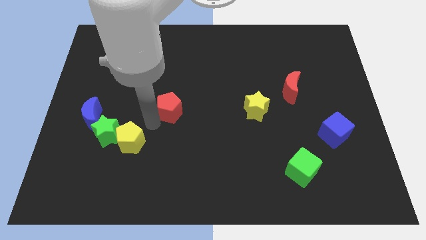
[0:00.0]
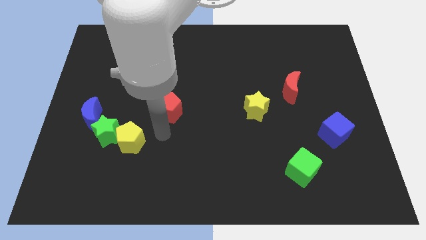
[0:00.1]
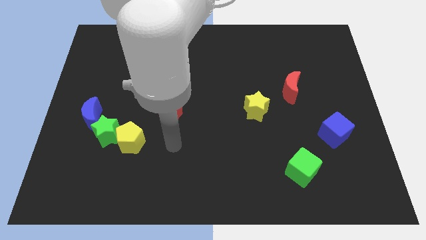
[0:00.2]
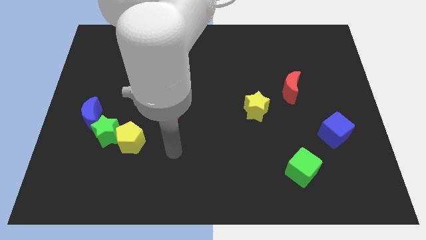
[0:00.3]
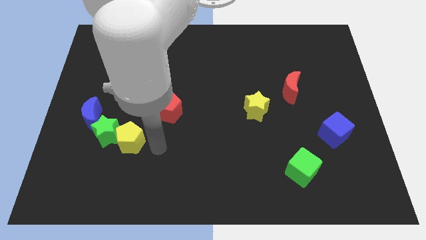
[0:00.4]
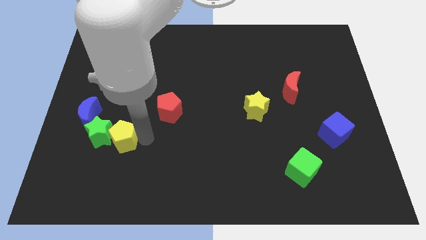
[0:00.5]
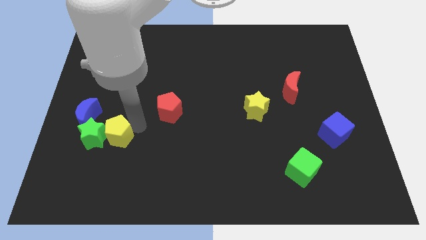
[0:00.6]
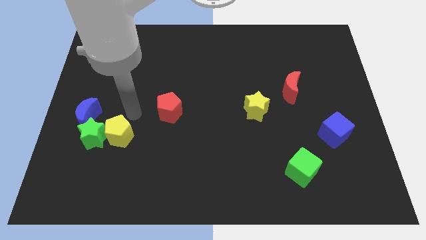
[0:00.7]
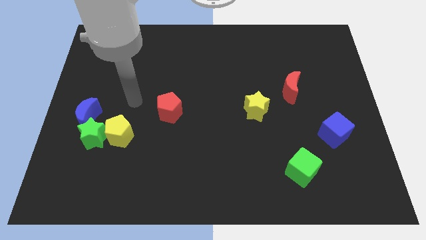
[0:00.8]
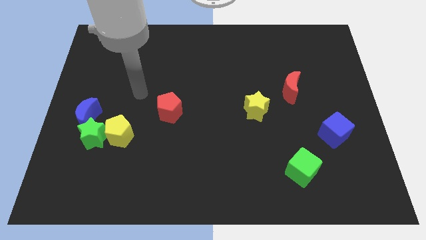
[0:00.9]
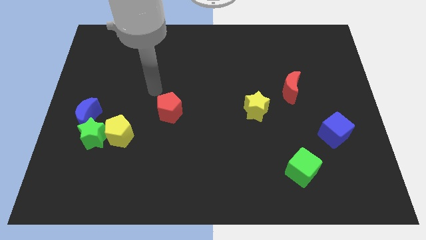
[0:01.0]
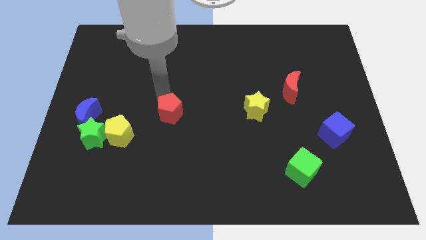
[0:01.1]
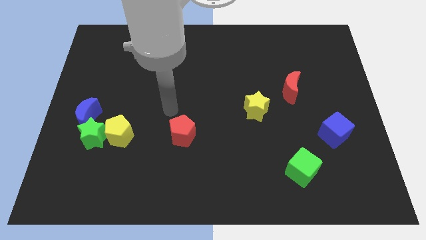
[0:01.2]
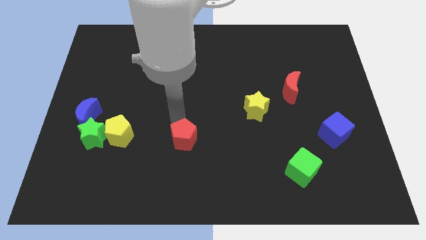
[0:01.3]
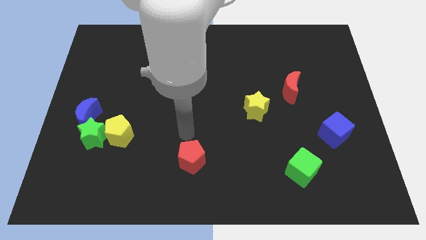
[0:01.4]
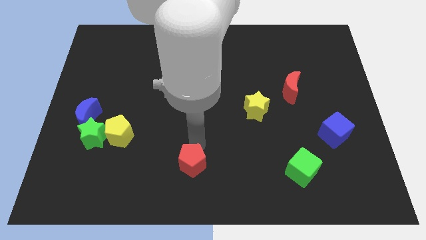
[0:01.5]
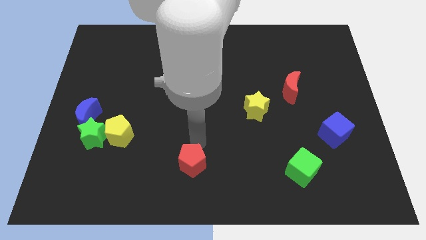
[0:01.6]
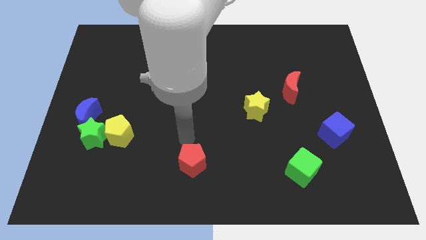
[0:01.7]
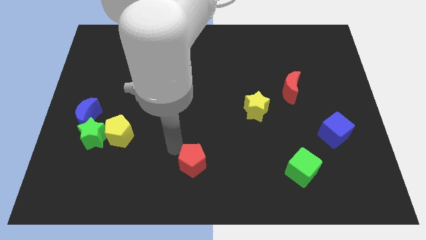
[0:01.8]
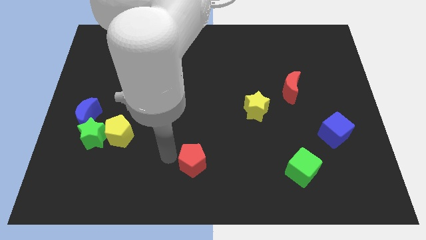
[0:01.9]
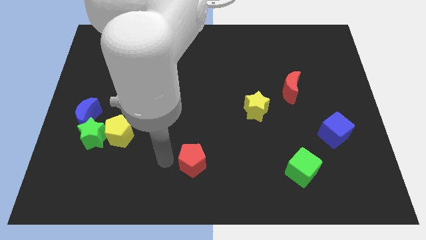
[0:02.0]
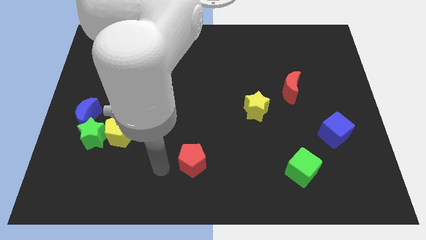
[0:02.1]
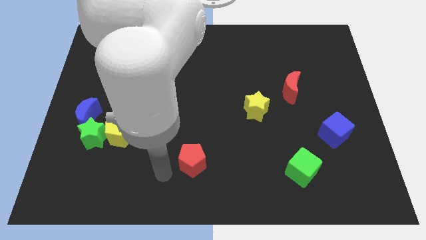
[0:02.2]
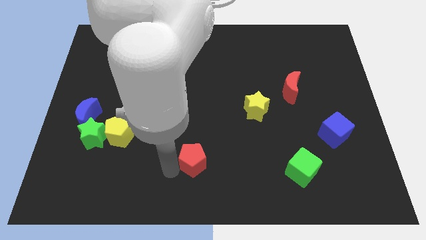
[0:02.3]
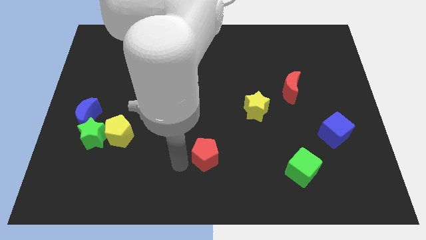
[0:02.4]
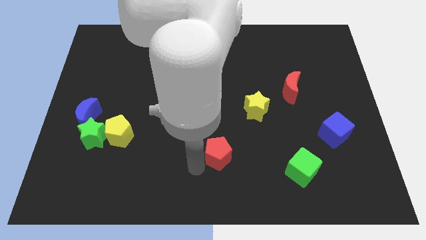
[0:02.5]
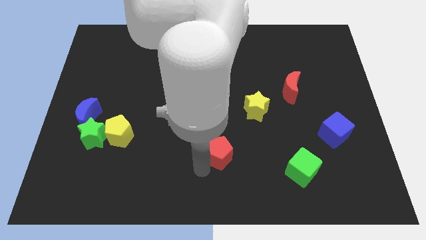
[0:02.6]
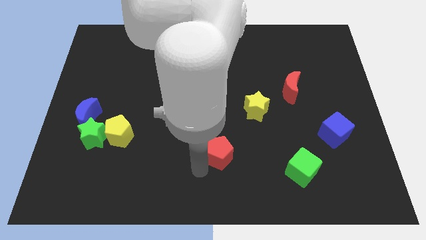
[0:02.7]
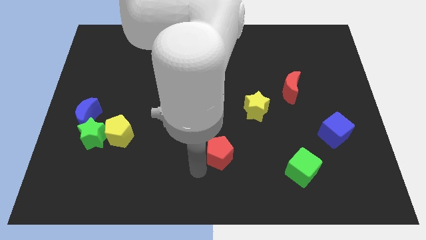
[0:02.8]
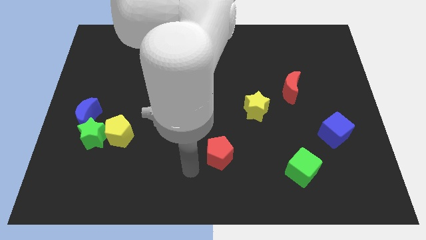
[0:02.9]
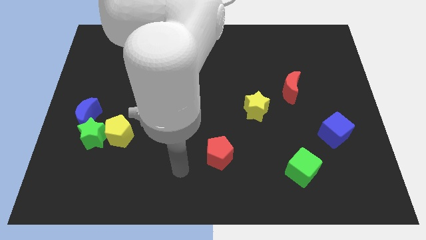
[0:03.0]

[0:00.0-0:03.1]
push the yellow pentagon and move the red pentagon diagonal below yellow star

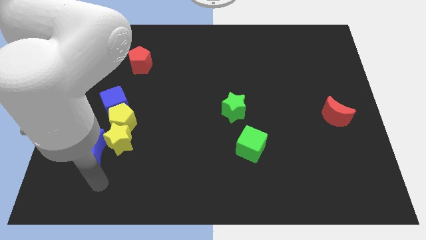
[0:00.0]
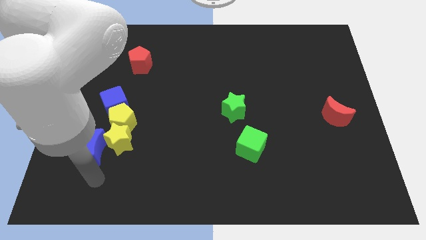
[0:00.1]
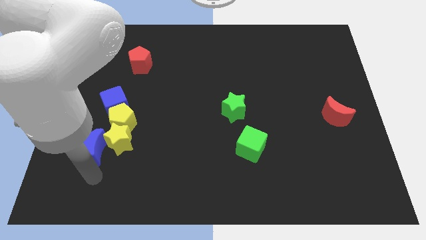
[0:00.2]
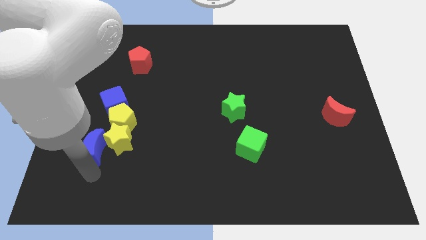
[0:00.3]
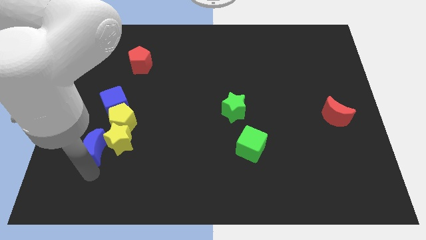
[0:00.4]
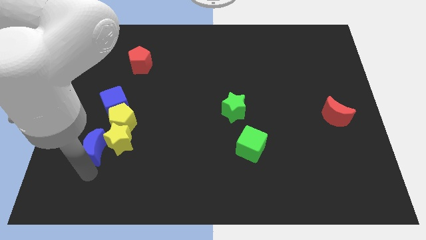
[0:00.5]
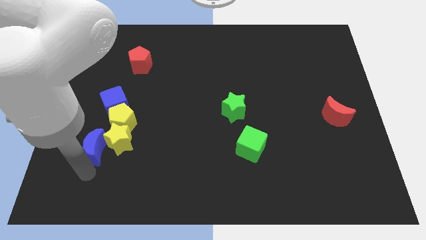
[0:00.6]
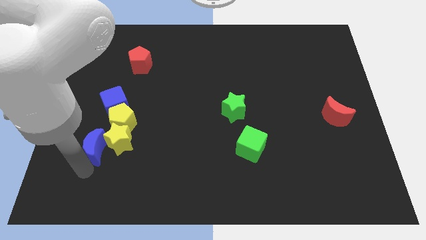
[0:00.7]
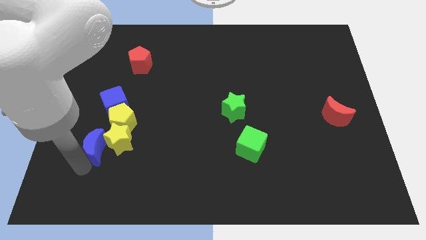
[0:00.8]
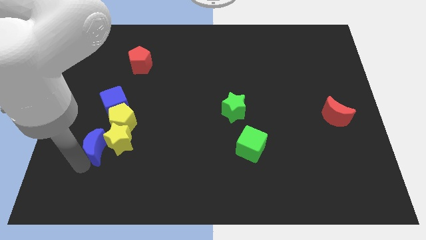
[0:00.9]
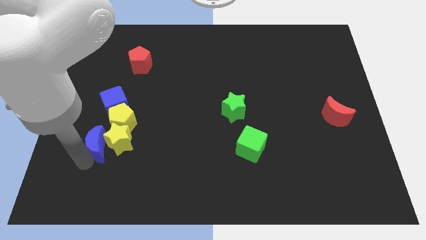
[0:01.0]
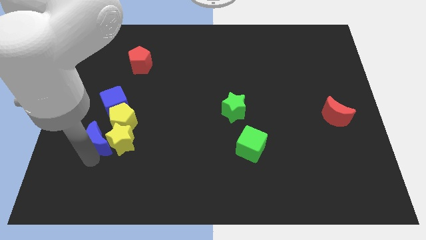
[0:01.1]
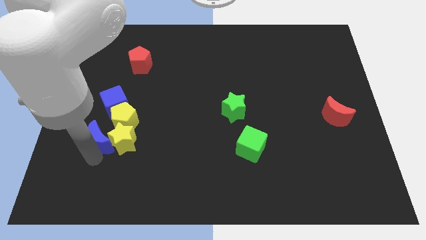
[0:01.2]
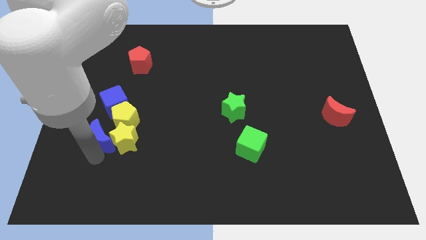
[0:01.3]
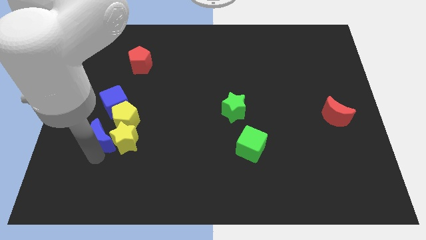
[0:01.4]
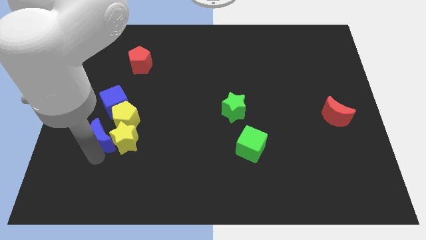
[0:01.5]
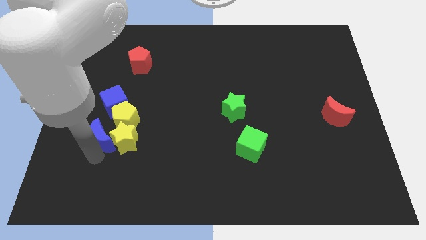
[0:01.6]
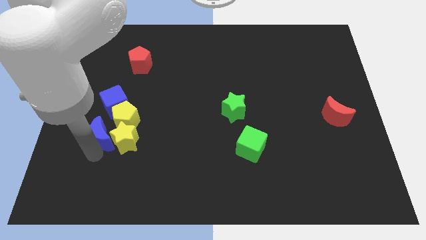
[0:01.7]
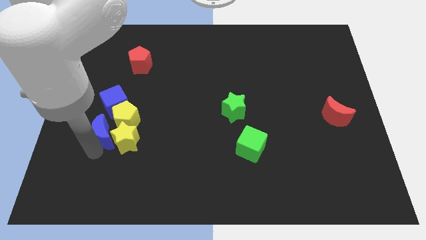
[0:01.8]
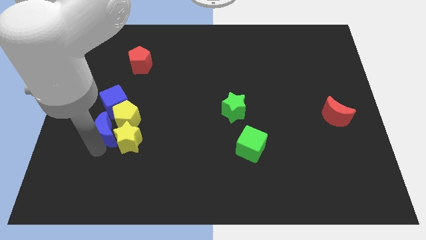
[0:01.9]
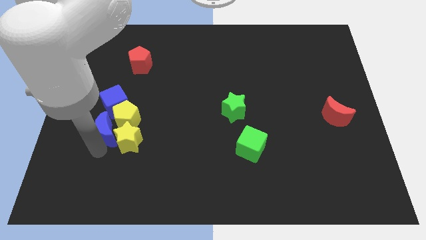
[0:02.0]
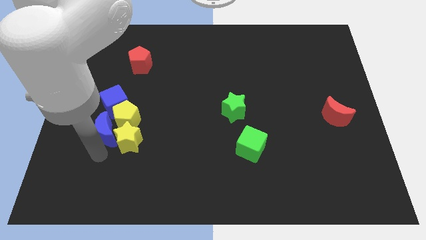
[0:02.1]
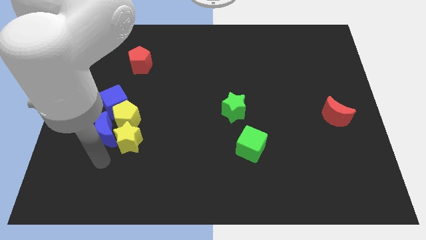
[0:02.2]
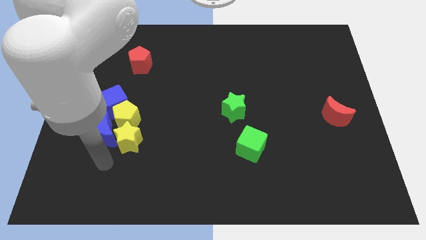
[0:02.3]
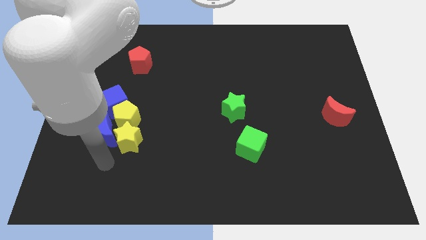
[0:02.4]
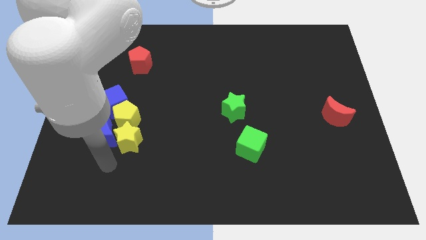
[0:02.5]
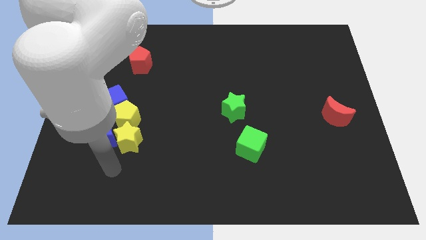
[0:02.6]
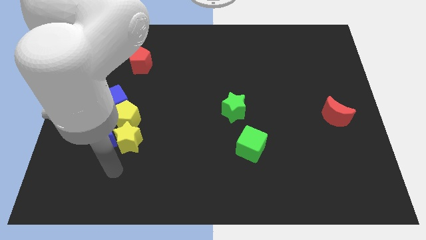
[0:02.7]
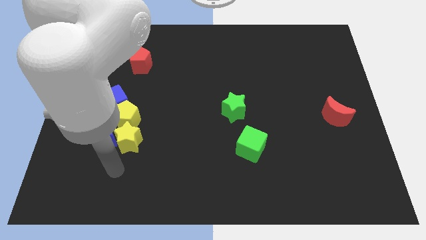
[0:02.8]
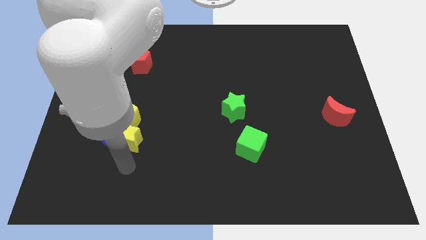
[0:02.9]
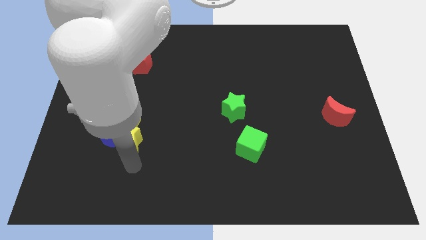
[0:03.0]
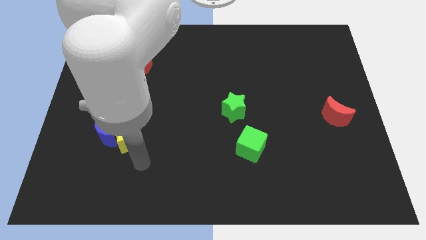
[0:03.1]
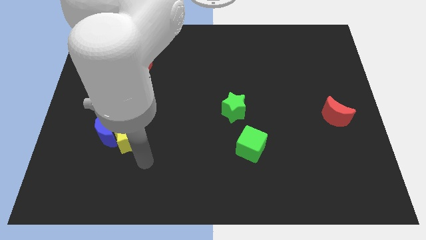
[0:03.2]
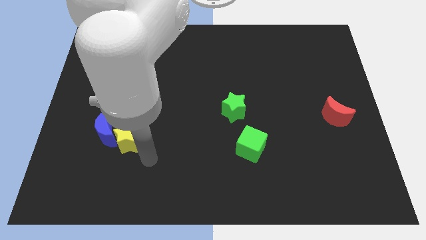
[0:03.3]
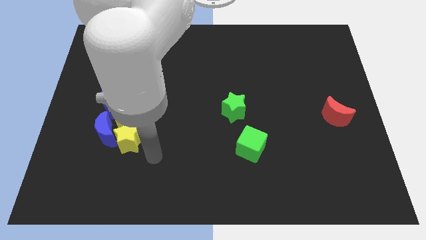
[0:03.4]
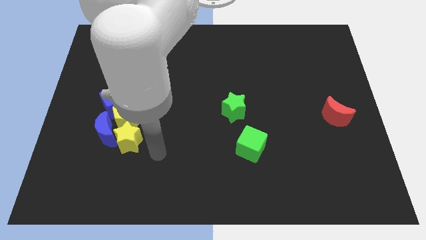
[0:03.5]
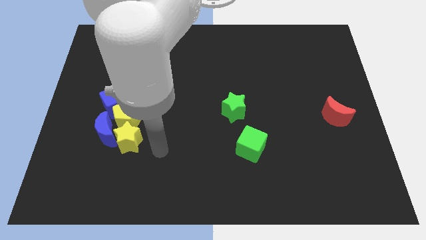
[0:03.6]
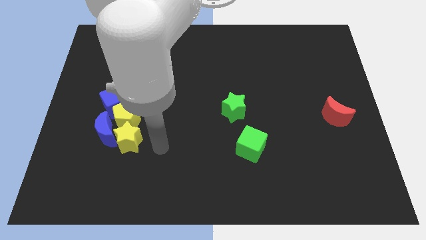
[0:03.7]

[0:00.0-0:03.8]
push the bloe moon into the yellow star and pentagon

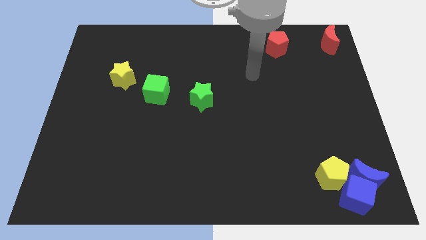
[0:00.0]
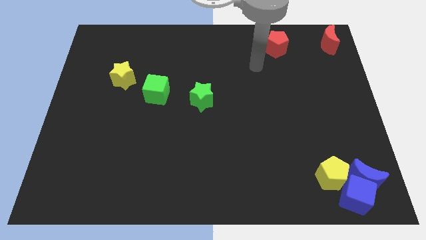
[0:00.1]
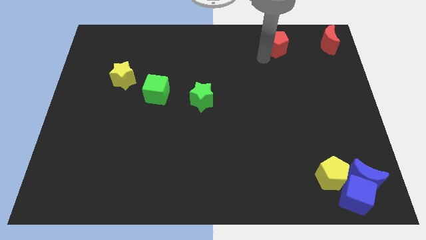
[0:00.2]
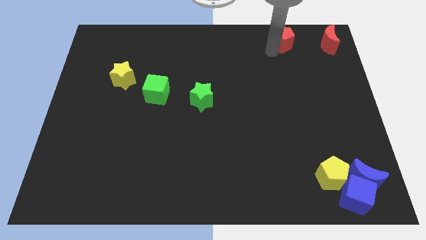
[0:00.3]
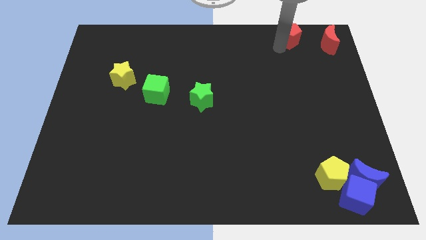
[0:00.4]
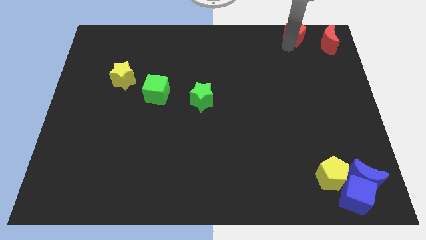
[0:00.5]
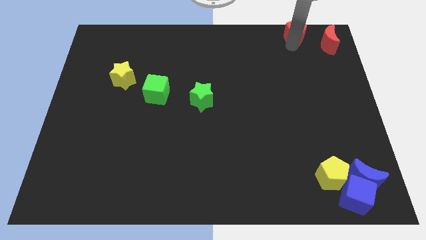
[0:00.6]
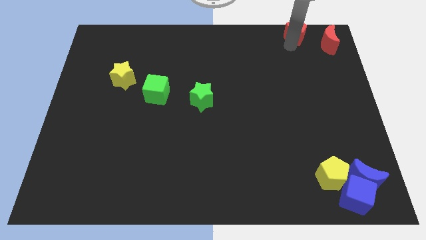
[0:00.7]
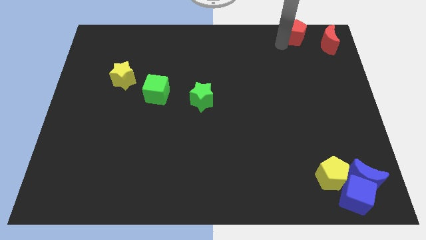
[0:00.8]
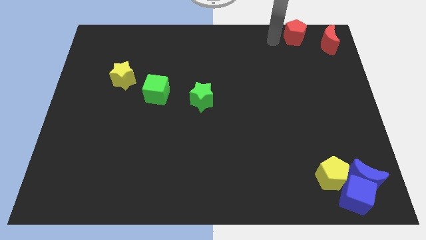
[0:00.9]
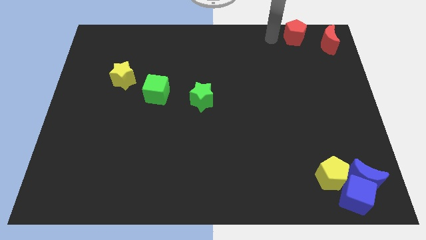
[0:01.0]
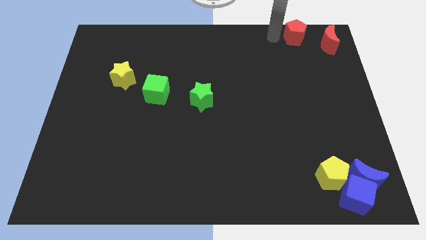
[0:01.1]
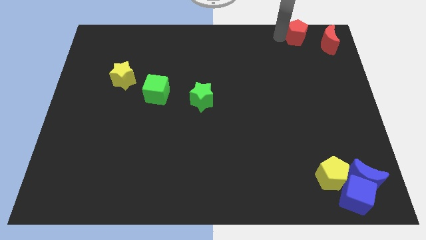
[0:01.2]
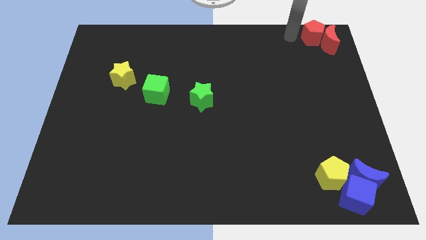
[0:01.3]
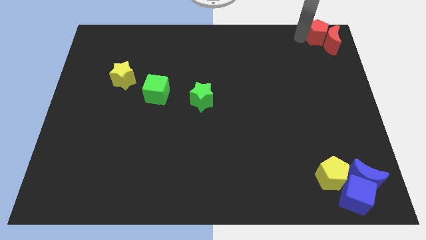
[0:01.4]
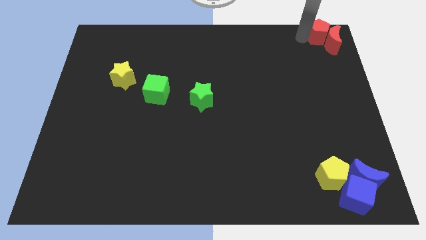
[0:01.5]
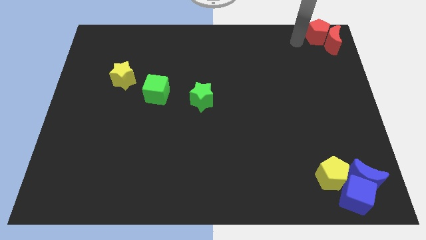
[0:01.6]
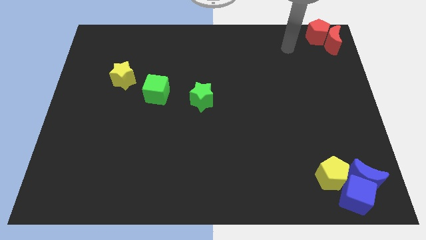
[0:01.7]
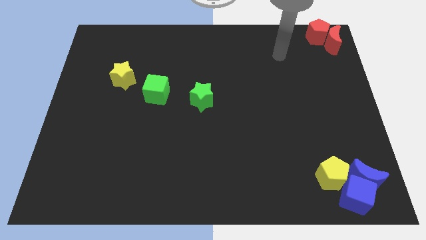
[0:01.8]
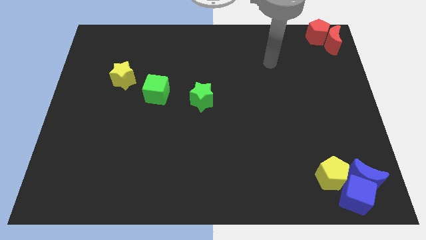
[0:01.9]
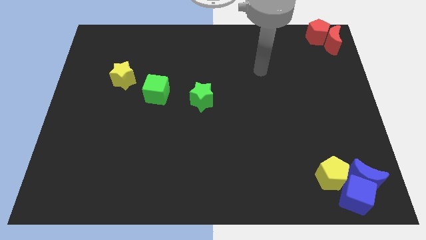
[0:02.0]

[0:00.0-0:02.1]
push the red pentagon into the red moon

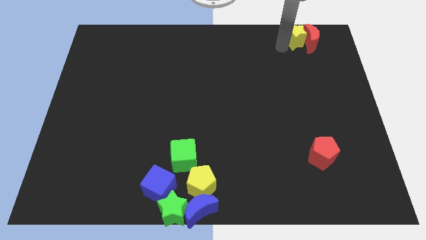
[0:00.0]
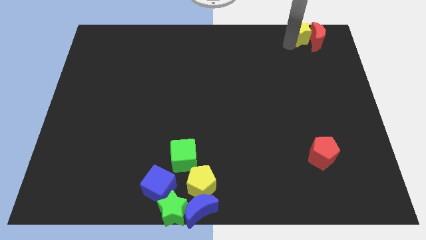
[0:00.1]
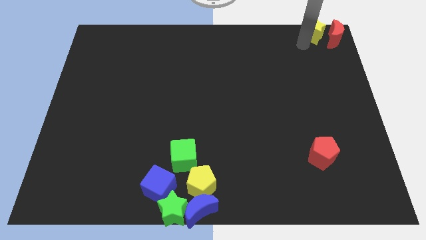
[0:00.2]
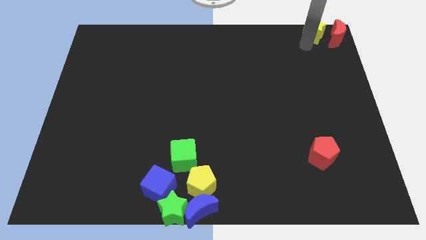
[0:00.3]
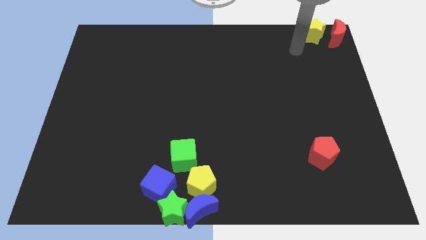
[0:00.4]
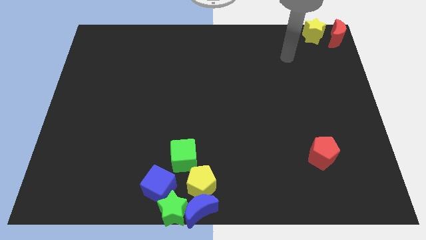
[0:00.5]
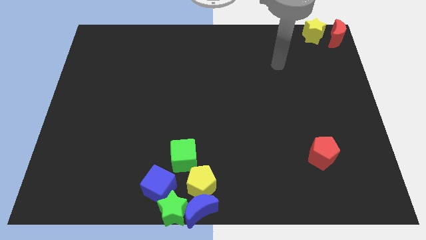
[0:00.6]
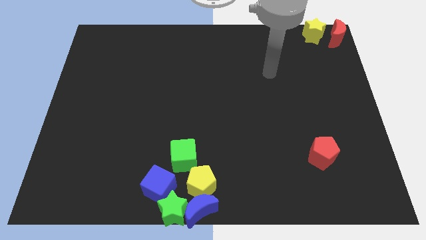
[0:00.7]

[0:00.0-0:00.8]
push the yellow star along with the red crescent to the top right corner of the board
